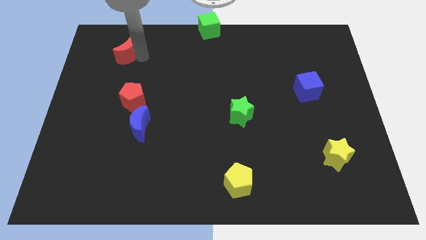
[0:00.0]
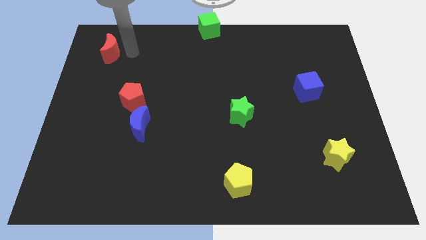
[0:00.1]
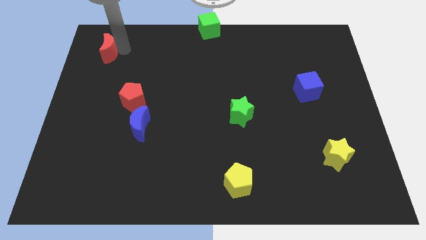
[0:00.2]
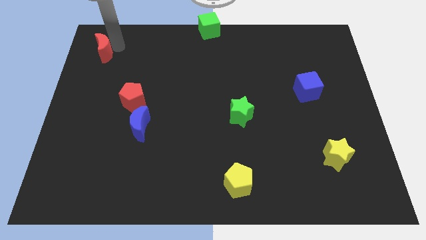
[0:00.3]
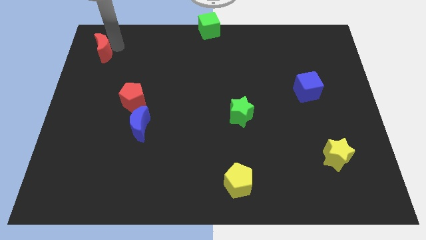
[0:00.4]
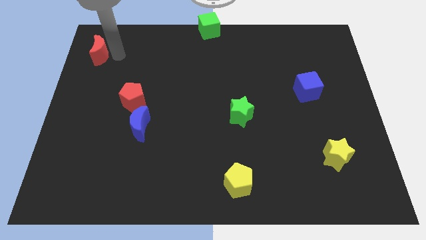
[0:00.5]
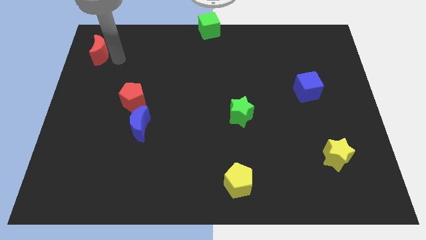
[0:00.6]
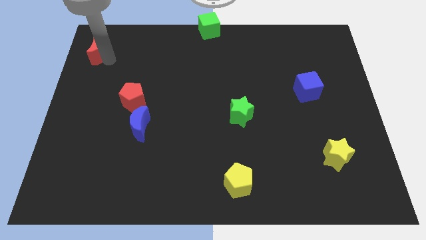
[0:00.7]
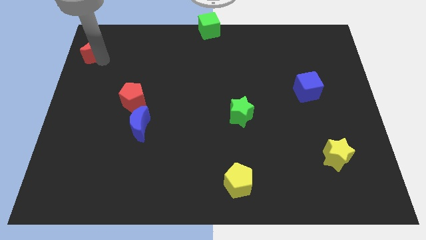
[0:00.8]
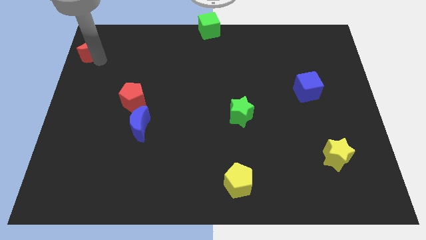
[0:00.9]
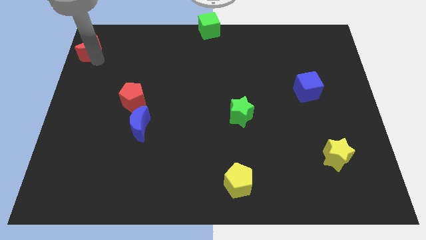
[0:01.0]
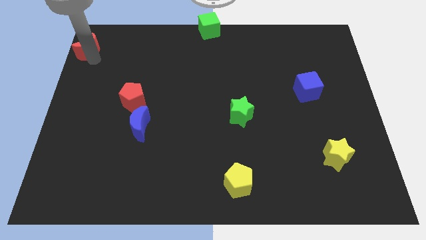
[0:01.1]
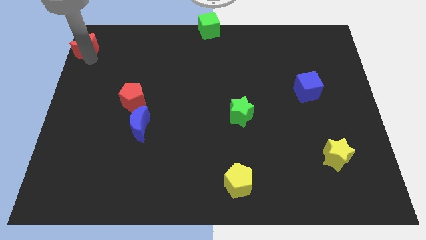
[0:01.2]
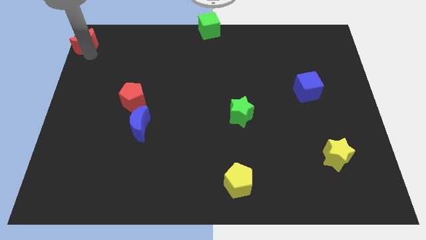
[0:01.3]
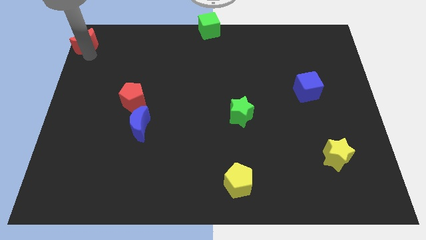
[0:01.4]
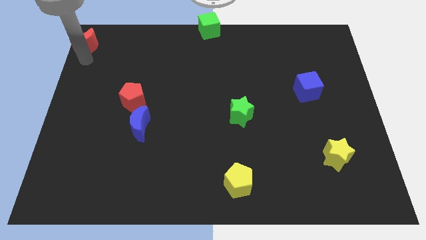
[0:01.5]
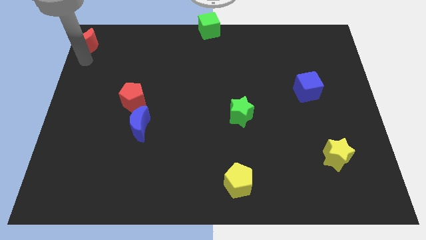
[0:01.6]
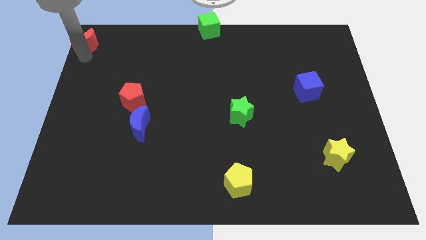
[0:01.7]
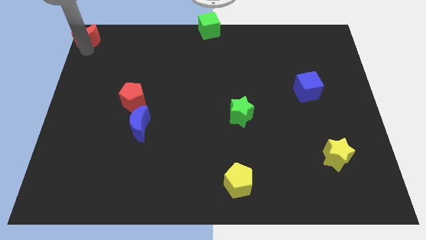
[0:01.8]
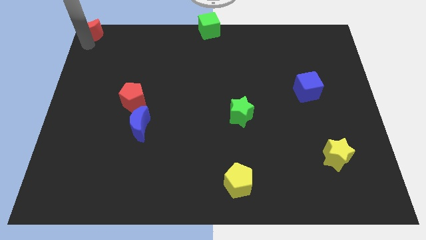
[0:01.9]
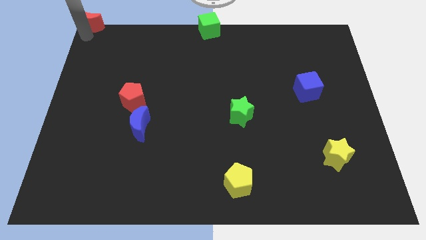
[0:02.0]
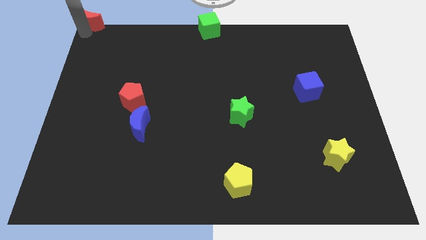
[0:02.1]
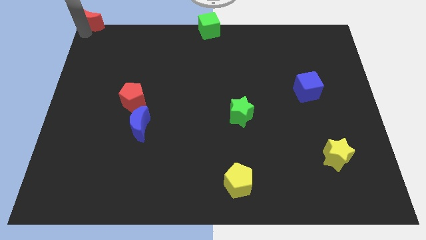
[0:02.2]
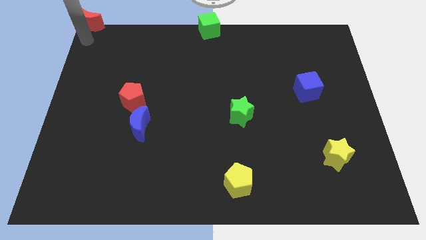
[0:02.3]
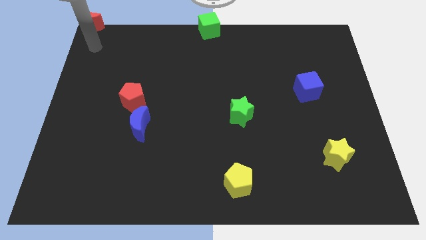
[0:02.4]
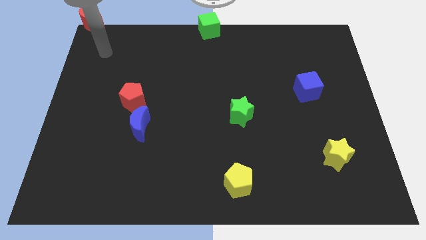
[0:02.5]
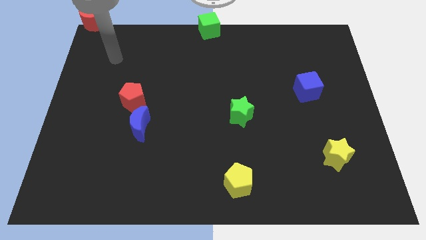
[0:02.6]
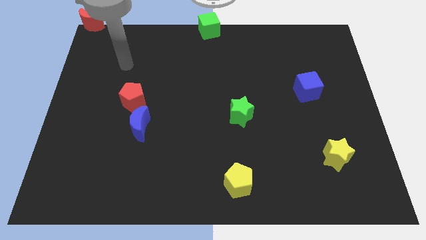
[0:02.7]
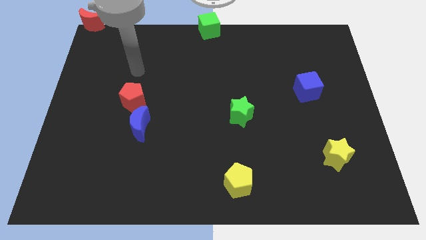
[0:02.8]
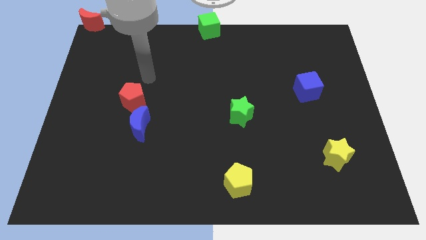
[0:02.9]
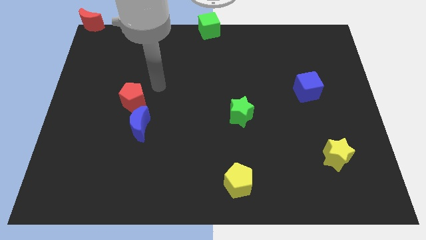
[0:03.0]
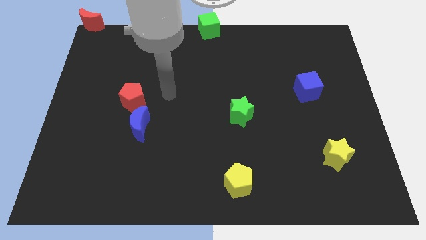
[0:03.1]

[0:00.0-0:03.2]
push the red crescent to the left top of the board

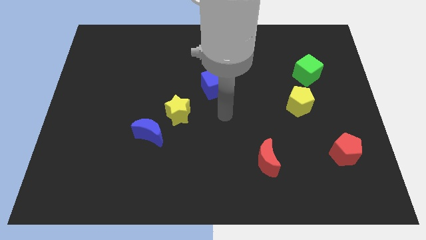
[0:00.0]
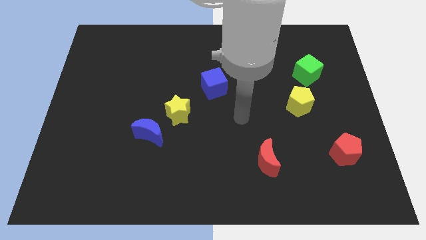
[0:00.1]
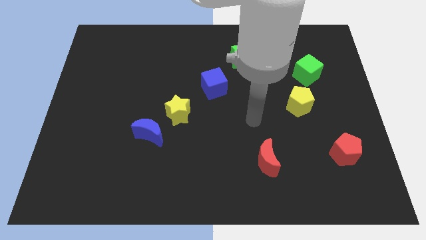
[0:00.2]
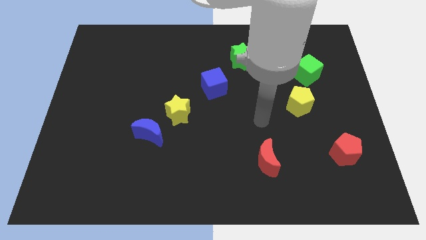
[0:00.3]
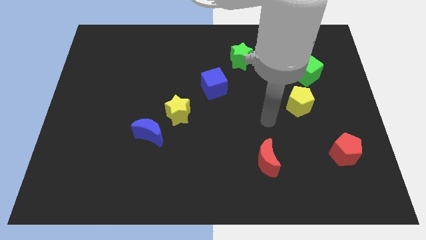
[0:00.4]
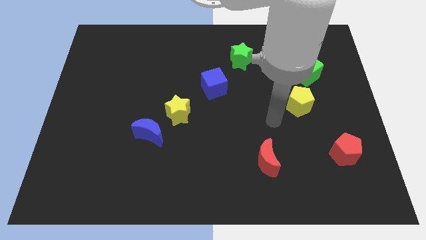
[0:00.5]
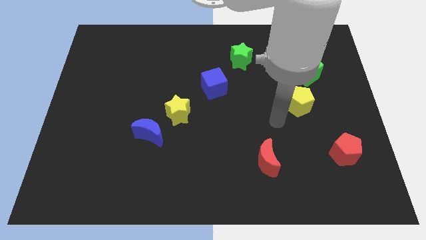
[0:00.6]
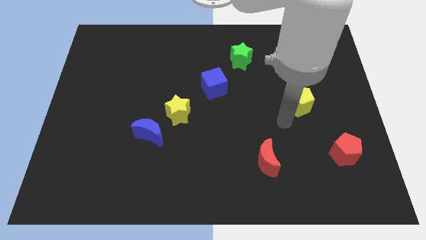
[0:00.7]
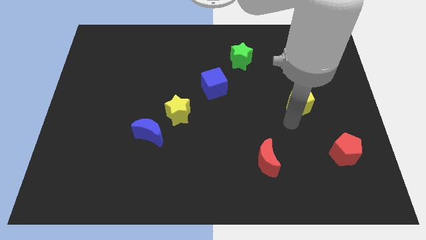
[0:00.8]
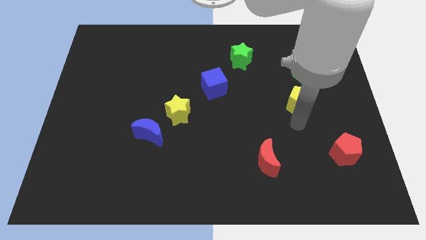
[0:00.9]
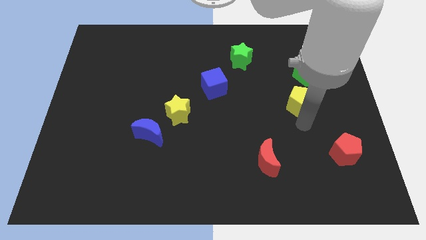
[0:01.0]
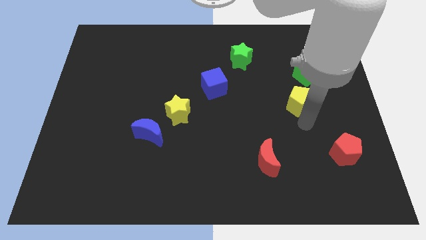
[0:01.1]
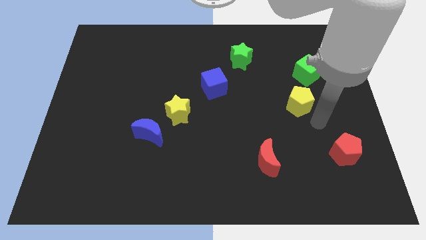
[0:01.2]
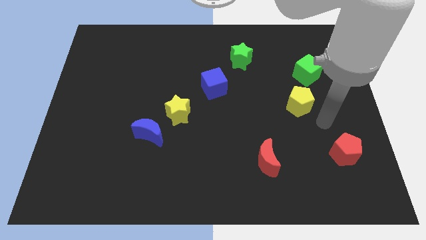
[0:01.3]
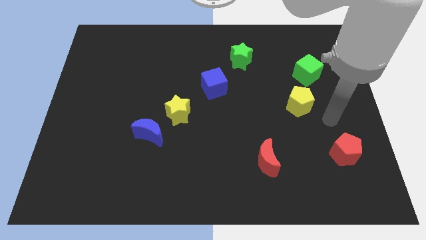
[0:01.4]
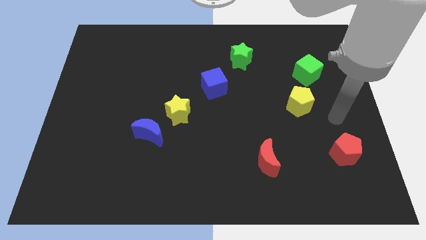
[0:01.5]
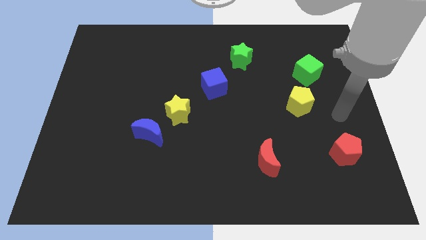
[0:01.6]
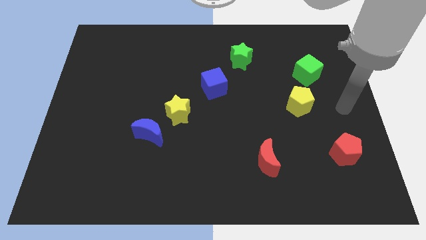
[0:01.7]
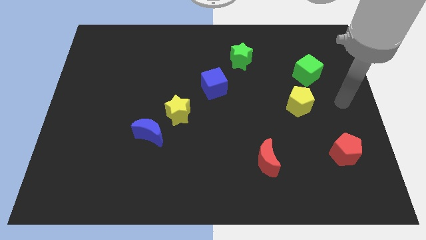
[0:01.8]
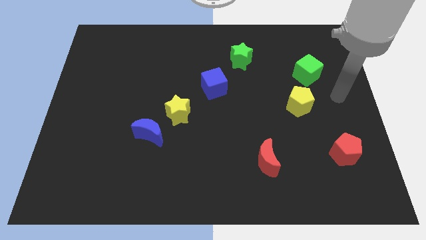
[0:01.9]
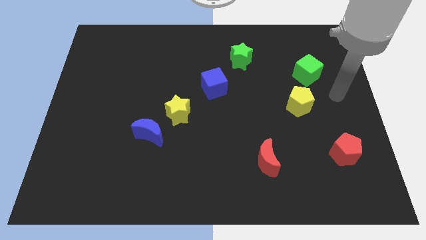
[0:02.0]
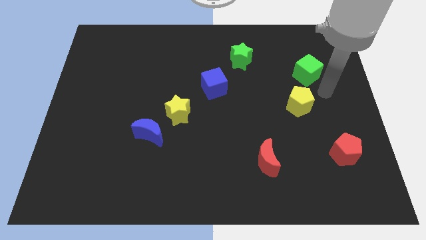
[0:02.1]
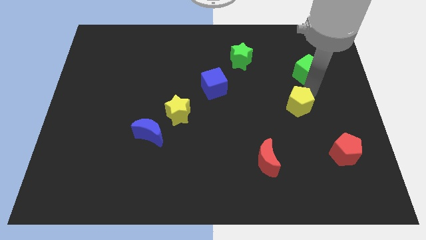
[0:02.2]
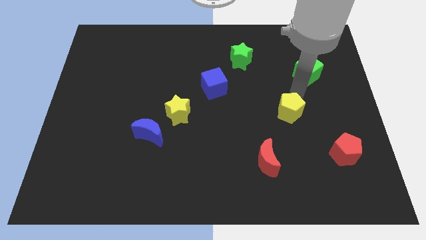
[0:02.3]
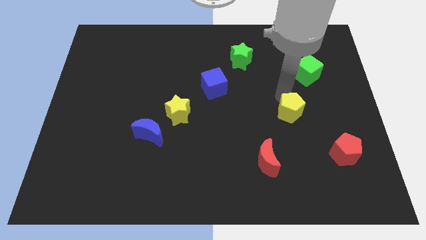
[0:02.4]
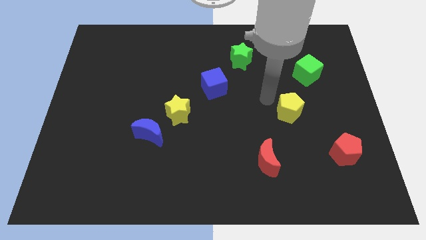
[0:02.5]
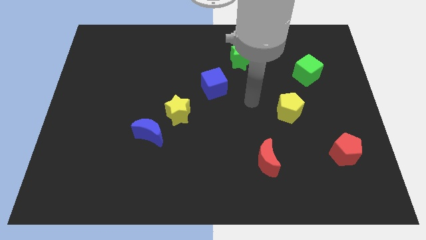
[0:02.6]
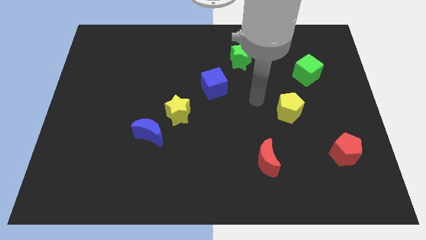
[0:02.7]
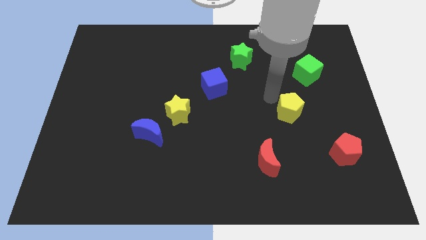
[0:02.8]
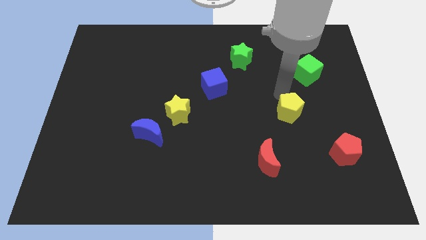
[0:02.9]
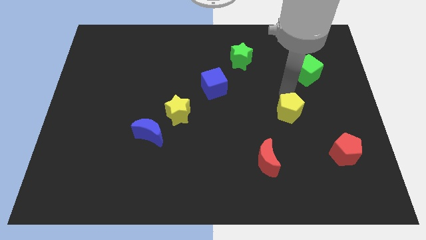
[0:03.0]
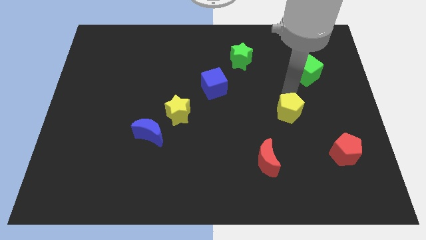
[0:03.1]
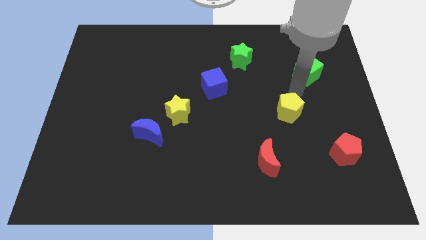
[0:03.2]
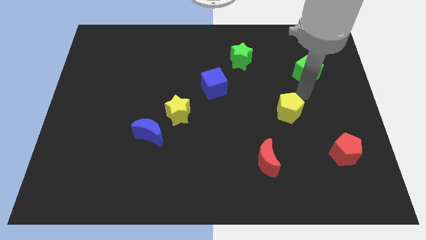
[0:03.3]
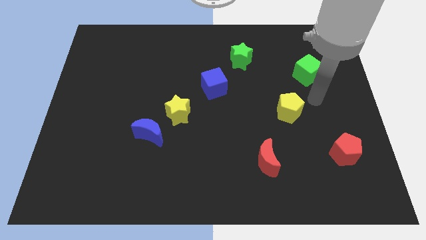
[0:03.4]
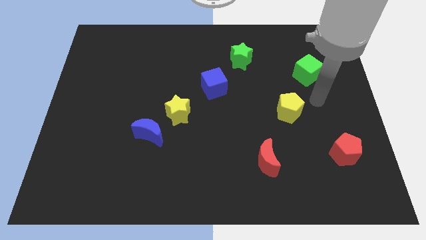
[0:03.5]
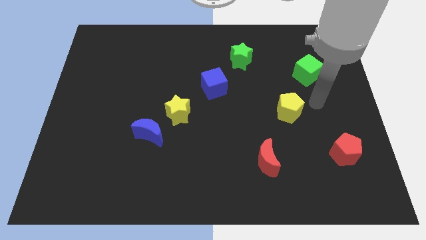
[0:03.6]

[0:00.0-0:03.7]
put the yellow pentagon diagonally in between the green cube and red crescent

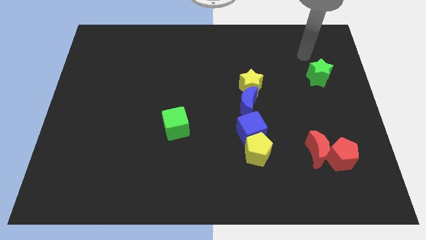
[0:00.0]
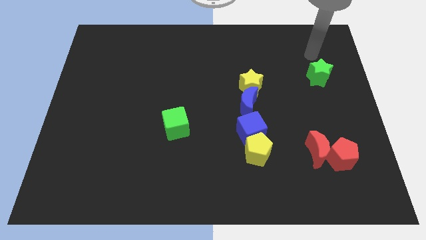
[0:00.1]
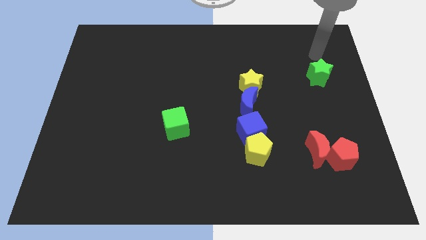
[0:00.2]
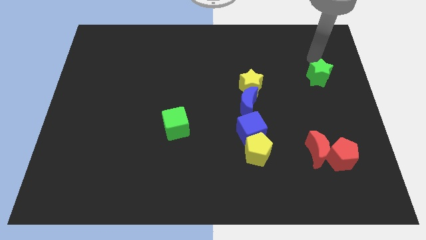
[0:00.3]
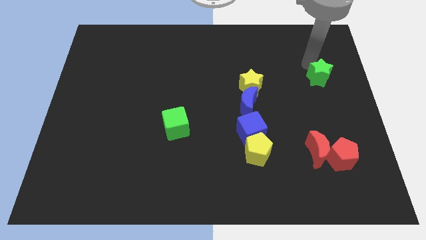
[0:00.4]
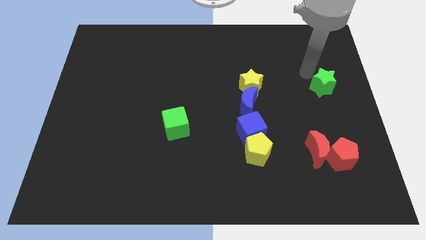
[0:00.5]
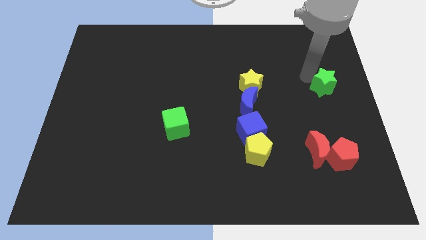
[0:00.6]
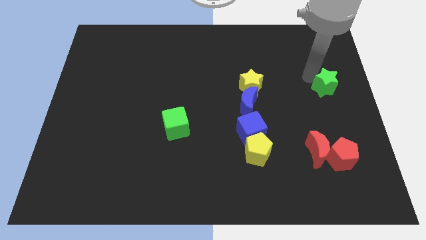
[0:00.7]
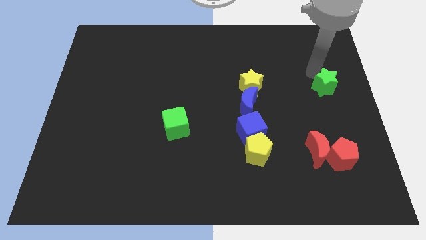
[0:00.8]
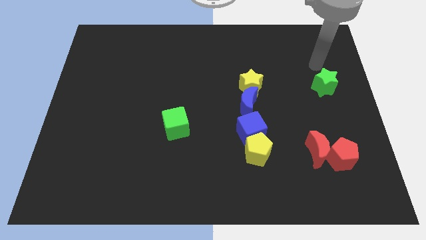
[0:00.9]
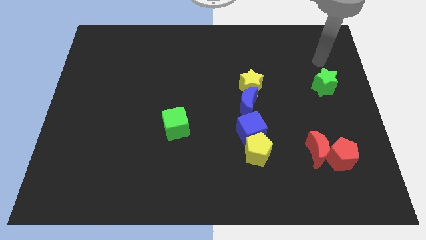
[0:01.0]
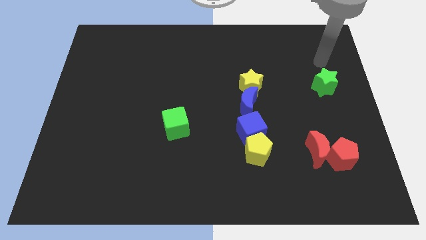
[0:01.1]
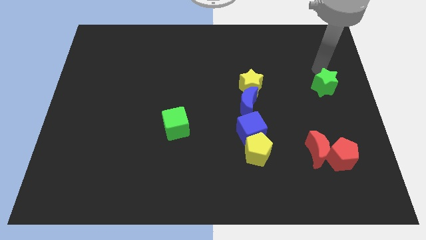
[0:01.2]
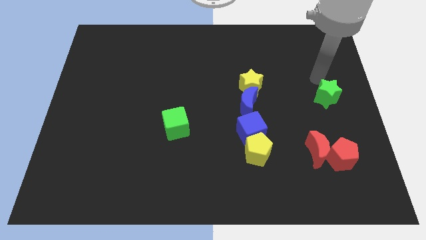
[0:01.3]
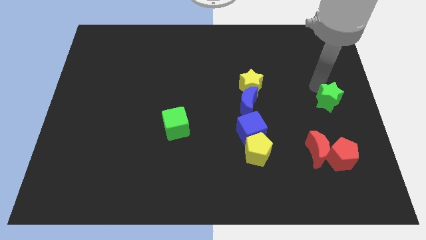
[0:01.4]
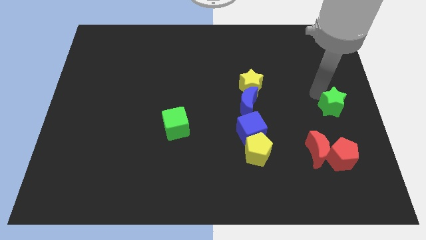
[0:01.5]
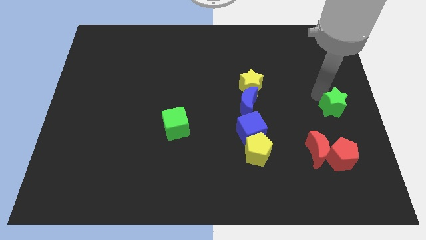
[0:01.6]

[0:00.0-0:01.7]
move the green star towards the red pentagon

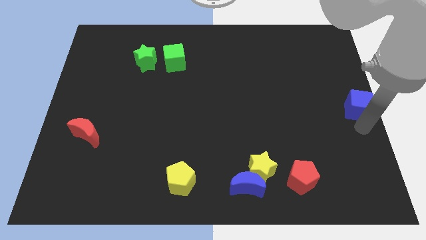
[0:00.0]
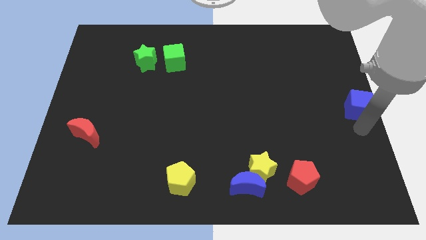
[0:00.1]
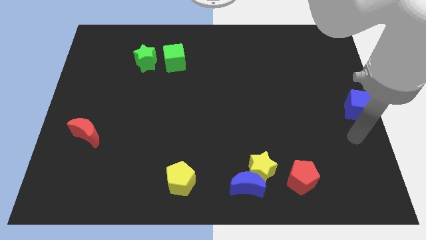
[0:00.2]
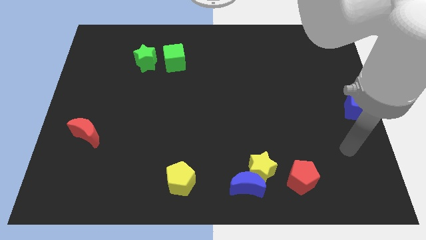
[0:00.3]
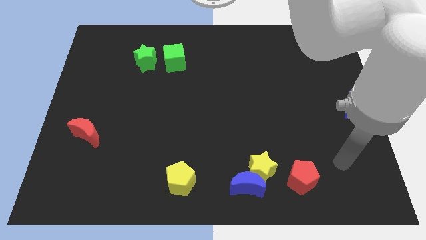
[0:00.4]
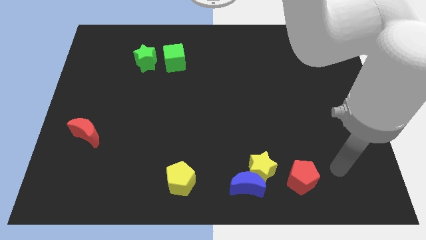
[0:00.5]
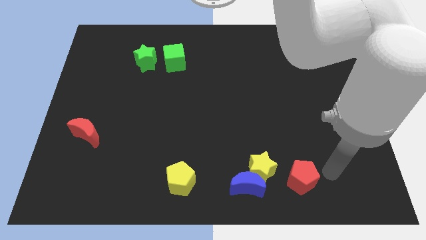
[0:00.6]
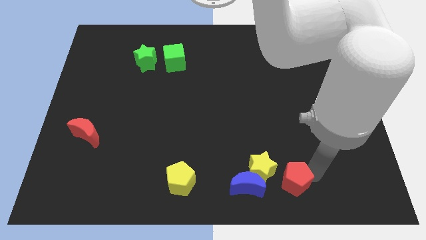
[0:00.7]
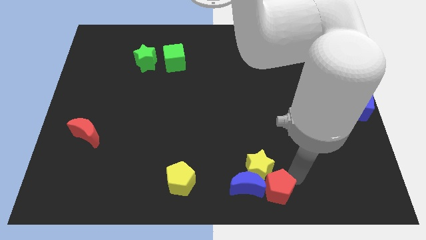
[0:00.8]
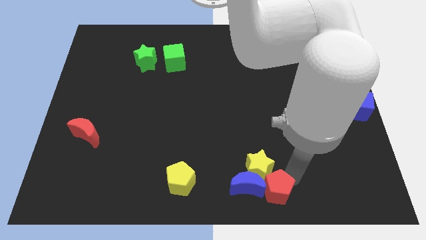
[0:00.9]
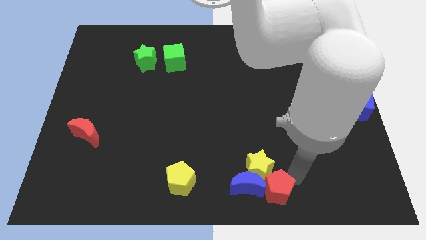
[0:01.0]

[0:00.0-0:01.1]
slide the red pentagon into the blue crescent
